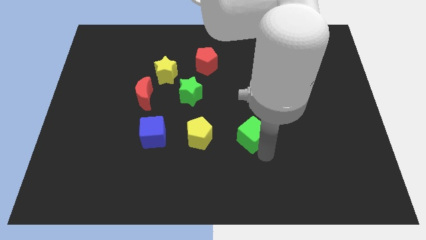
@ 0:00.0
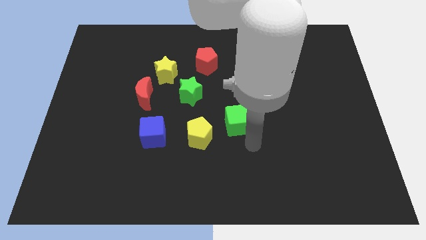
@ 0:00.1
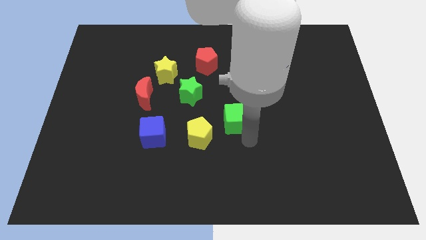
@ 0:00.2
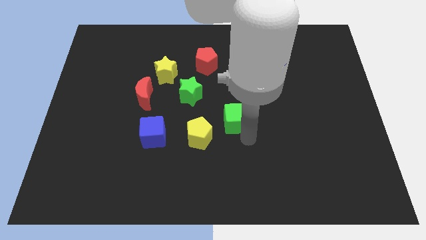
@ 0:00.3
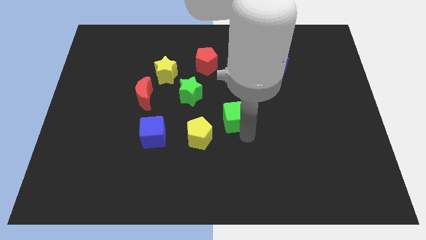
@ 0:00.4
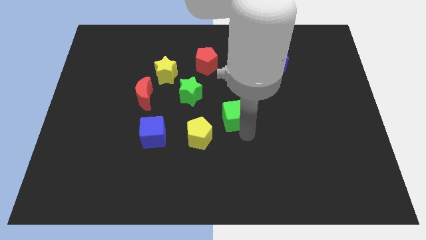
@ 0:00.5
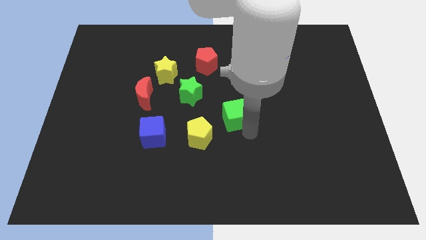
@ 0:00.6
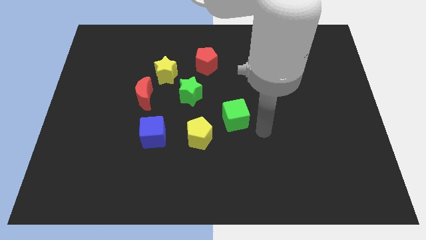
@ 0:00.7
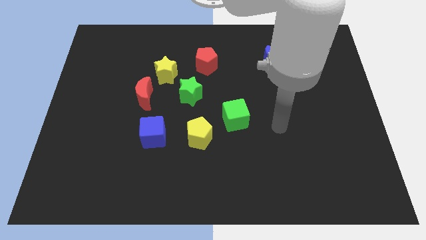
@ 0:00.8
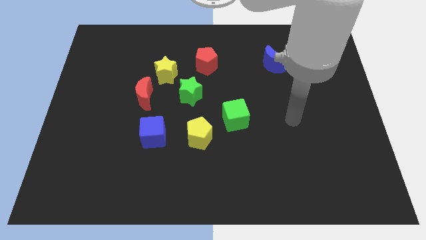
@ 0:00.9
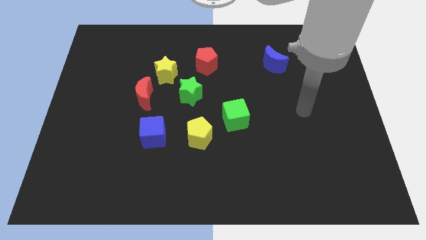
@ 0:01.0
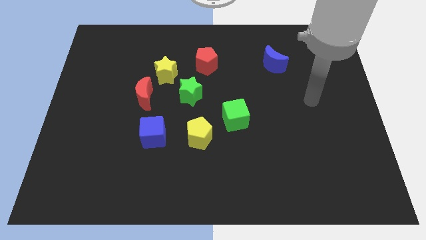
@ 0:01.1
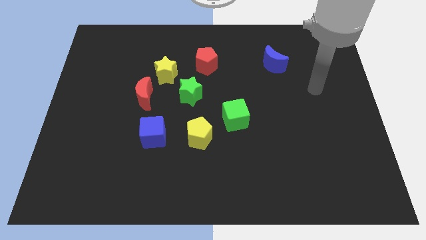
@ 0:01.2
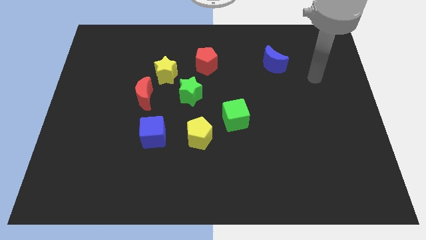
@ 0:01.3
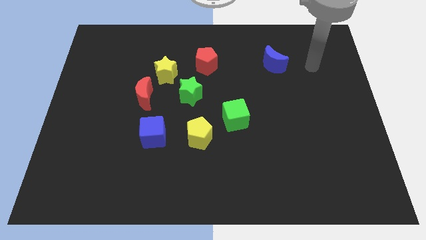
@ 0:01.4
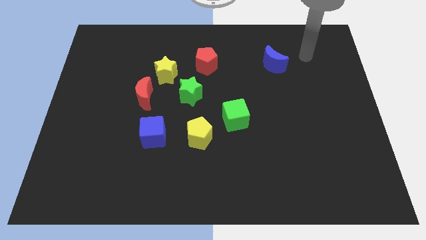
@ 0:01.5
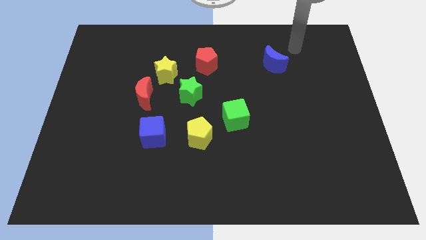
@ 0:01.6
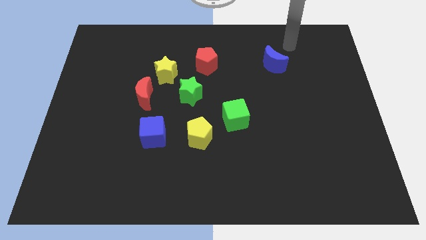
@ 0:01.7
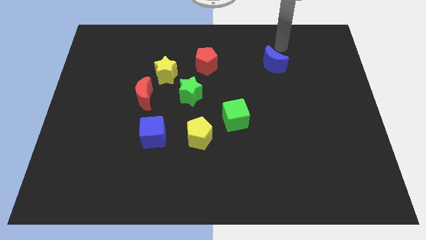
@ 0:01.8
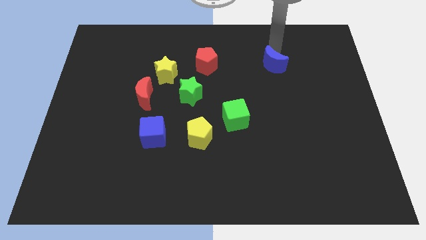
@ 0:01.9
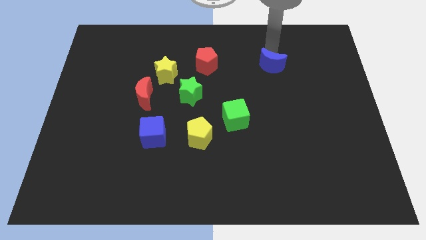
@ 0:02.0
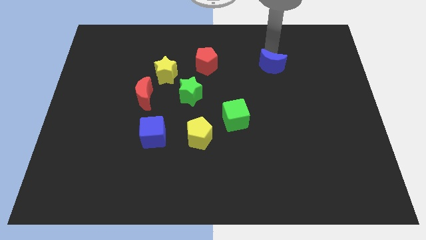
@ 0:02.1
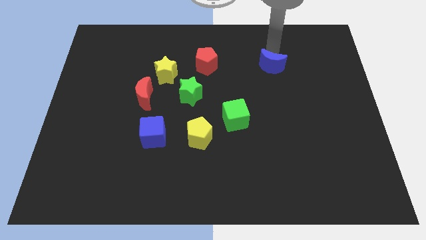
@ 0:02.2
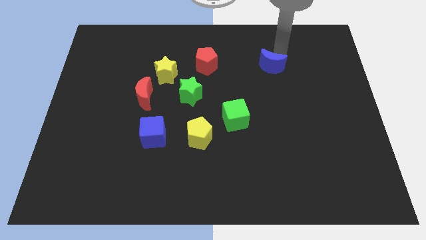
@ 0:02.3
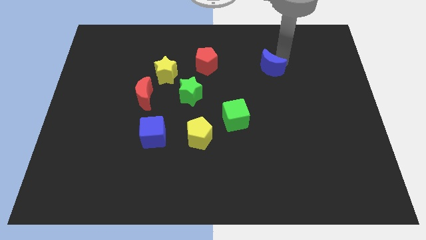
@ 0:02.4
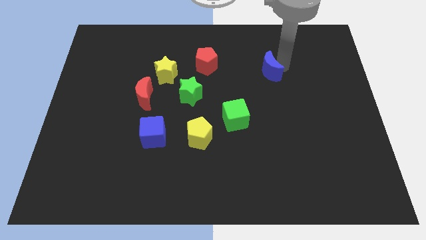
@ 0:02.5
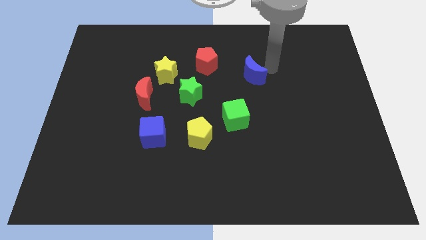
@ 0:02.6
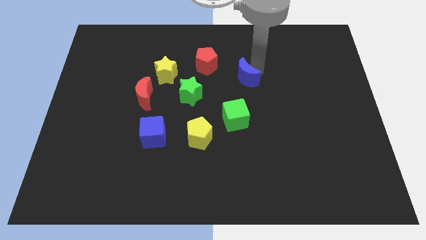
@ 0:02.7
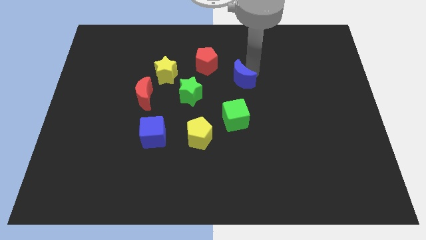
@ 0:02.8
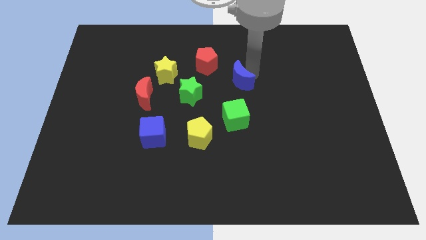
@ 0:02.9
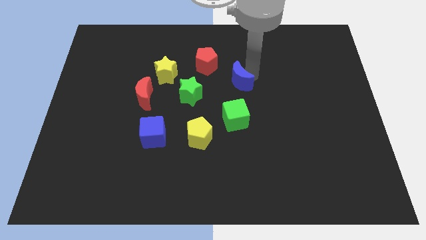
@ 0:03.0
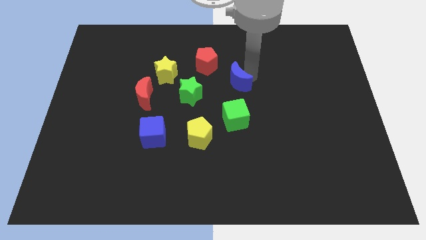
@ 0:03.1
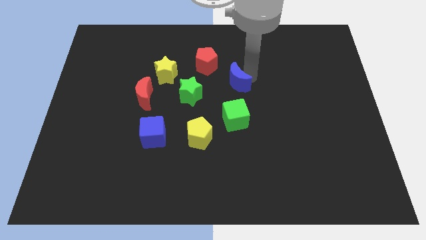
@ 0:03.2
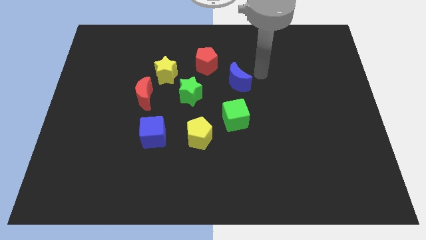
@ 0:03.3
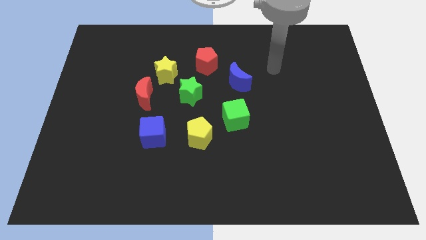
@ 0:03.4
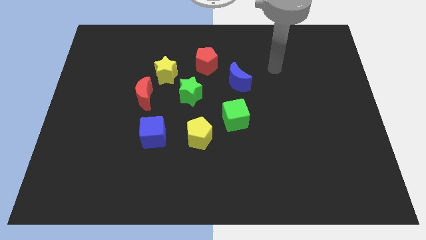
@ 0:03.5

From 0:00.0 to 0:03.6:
move the blue moon diagonally bottom right to red pentagon

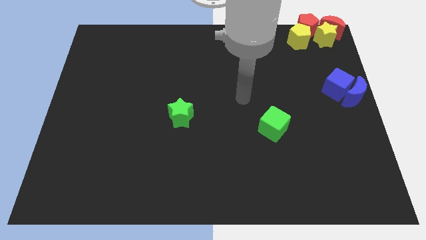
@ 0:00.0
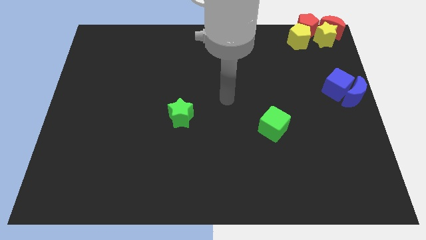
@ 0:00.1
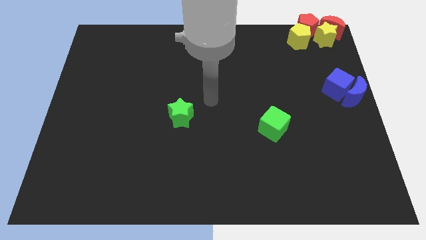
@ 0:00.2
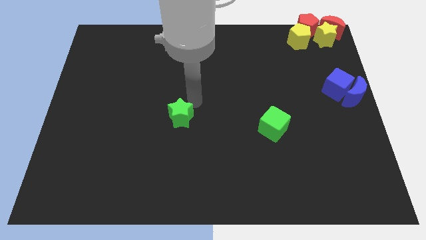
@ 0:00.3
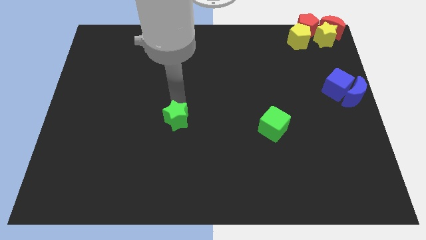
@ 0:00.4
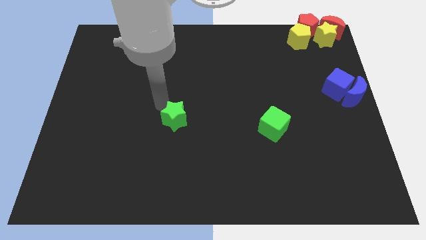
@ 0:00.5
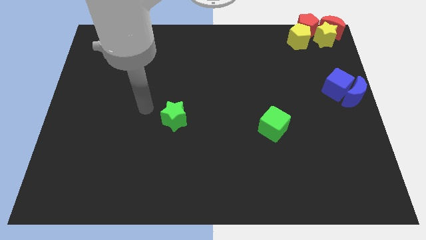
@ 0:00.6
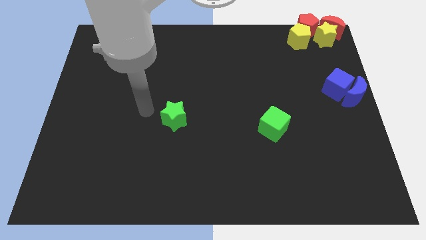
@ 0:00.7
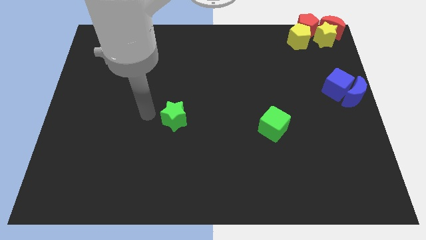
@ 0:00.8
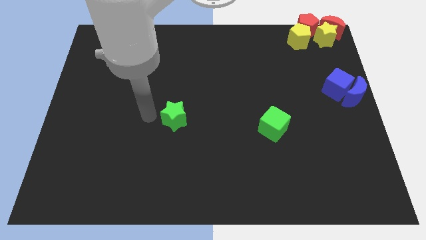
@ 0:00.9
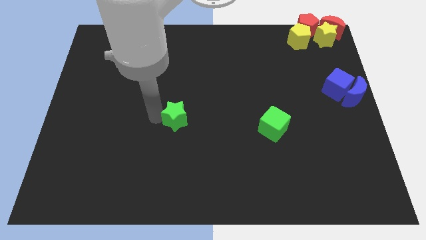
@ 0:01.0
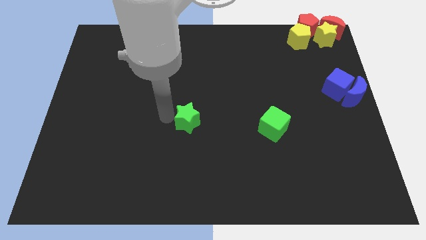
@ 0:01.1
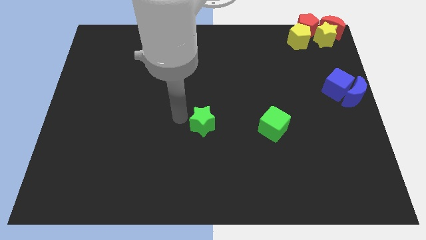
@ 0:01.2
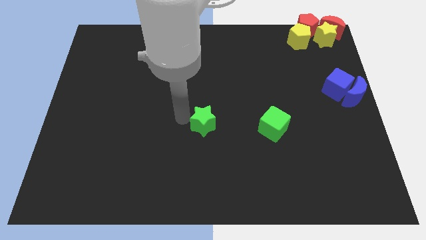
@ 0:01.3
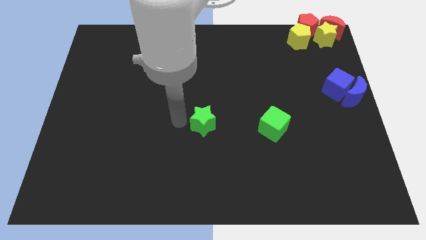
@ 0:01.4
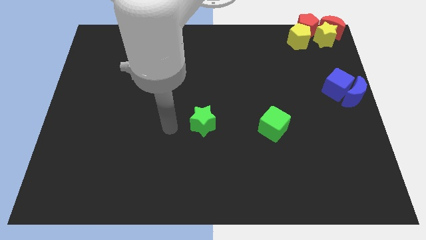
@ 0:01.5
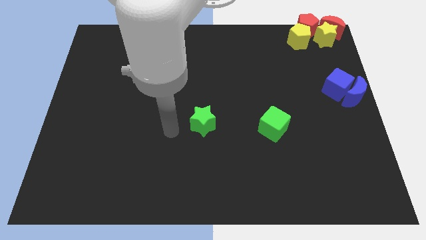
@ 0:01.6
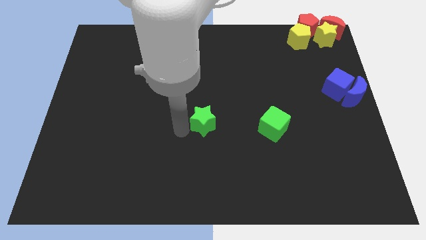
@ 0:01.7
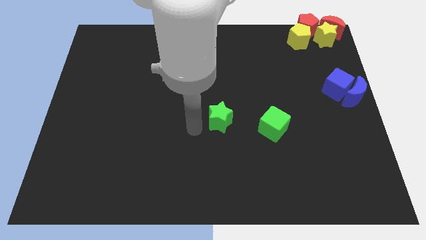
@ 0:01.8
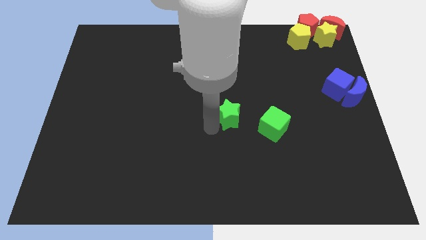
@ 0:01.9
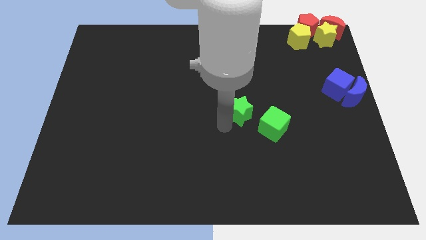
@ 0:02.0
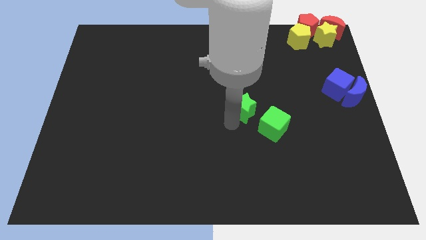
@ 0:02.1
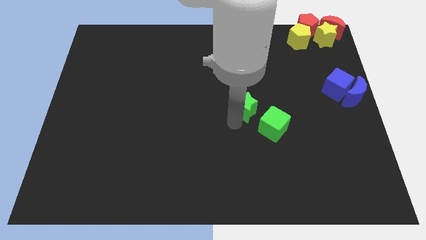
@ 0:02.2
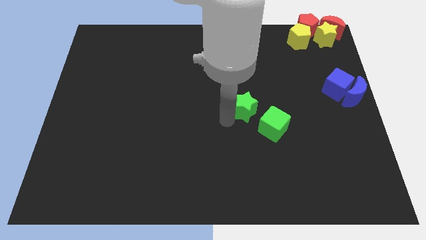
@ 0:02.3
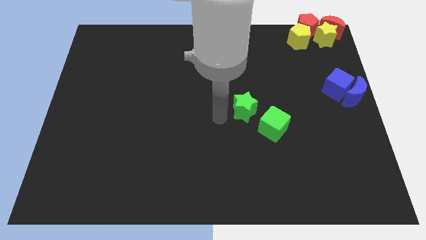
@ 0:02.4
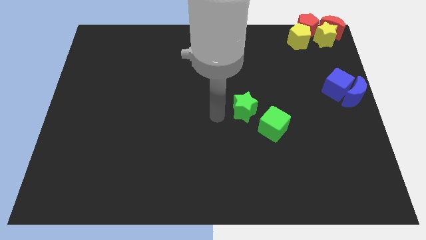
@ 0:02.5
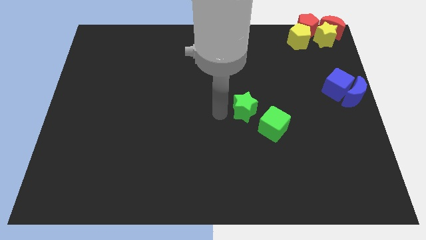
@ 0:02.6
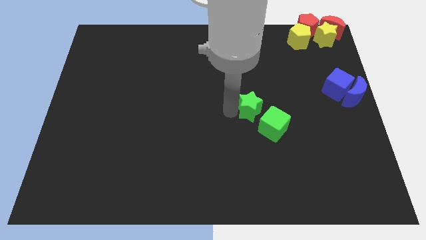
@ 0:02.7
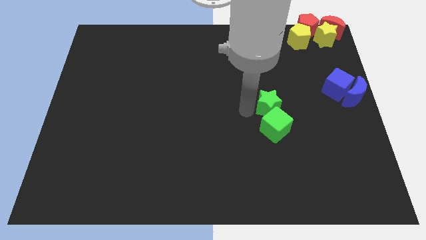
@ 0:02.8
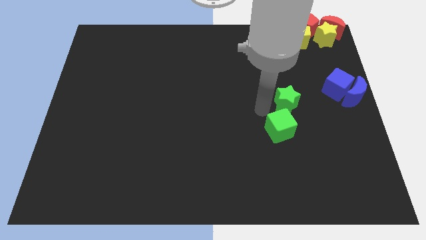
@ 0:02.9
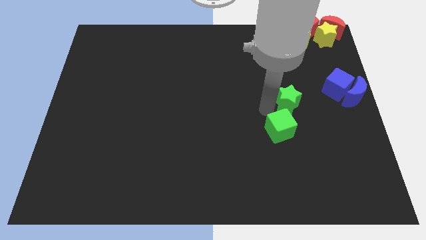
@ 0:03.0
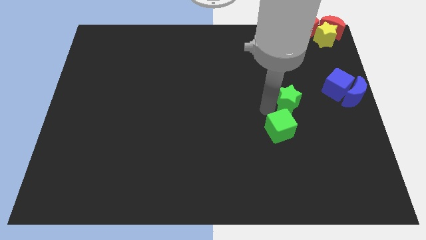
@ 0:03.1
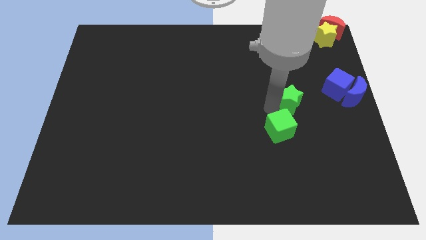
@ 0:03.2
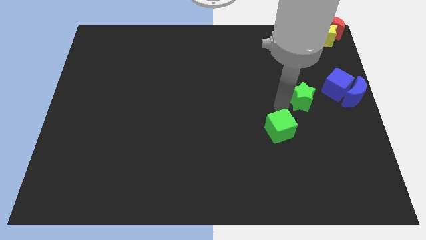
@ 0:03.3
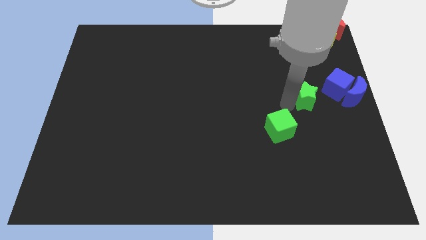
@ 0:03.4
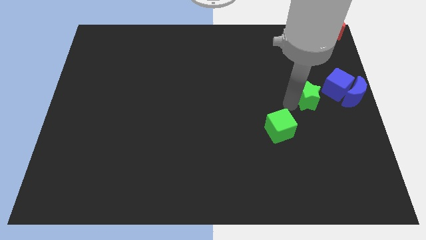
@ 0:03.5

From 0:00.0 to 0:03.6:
place the green star between blue cube and green cube

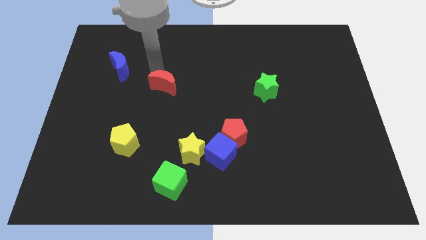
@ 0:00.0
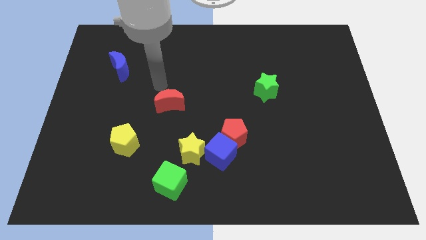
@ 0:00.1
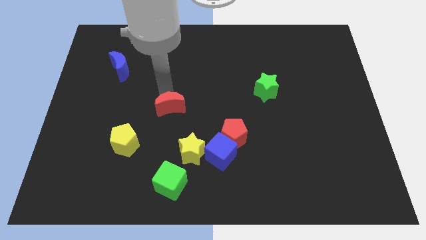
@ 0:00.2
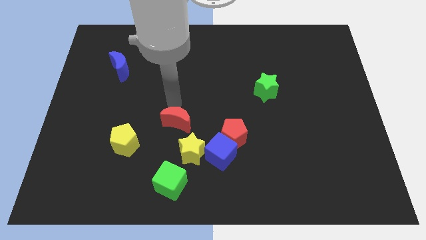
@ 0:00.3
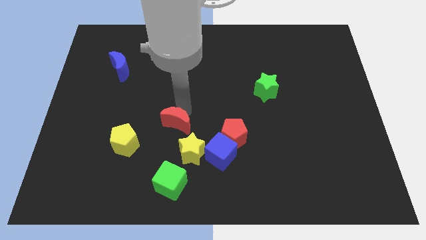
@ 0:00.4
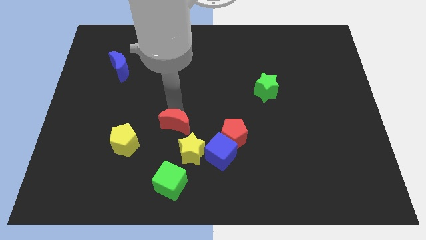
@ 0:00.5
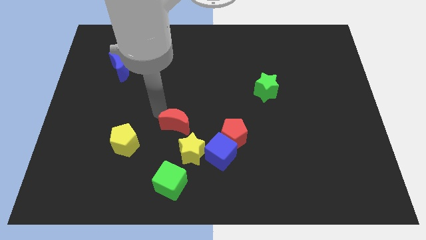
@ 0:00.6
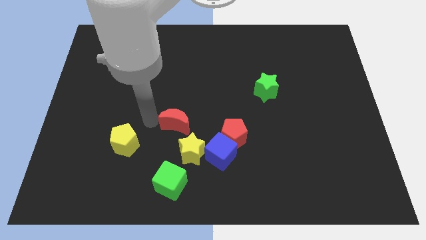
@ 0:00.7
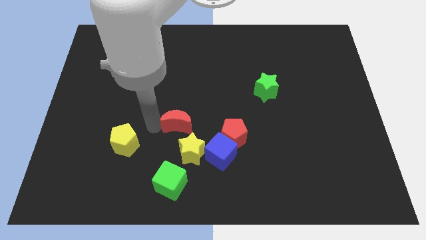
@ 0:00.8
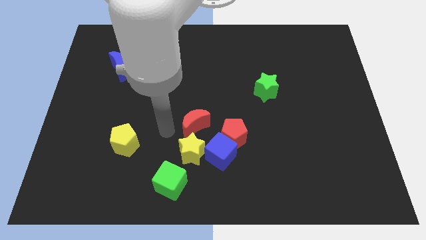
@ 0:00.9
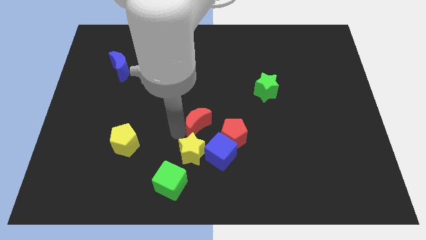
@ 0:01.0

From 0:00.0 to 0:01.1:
place the red crescent above the yellow star

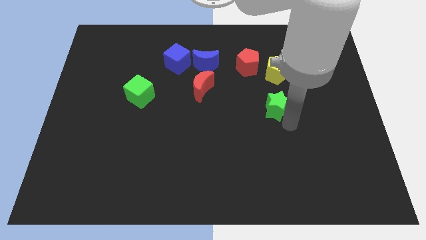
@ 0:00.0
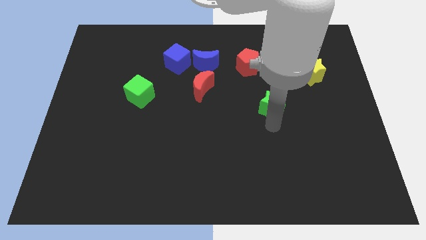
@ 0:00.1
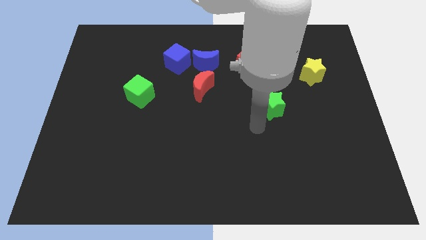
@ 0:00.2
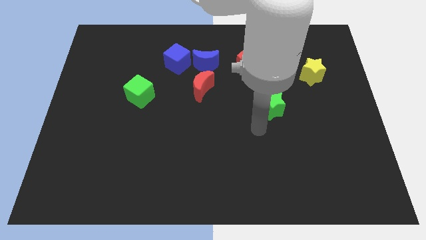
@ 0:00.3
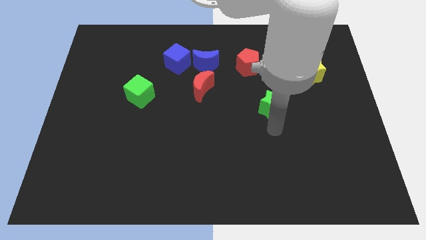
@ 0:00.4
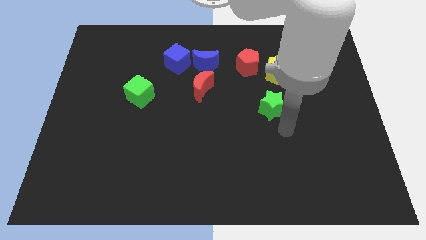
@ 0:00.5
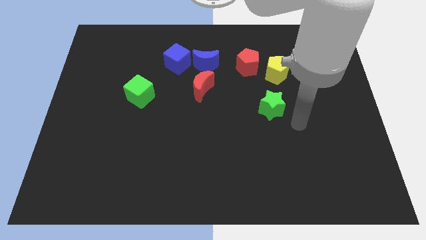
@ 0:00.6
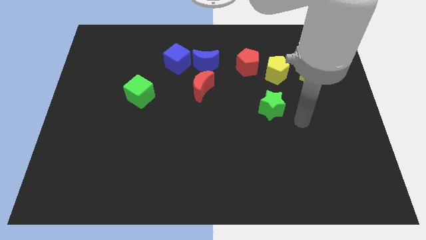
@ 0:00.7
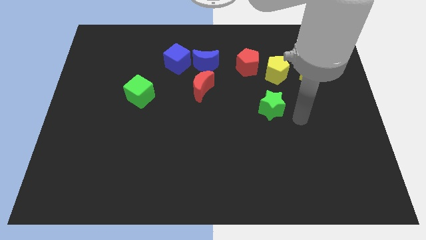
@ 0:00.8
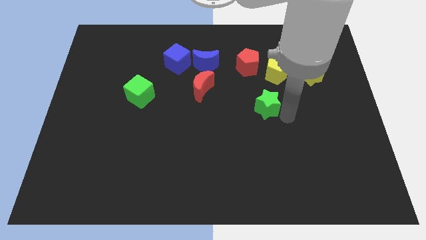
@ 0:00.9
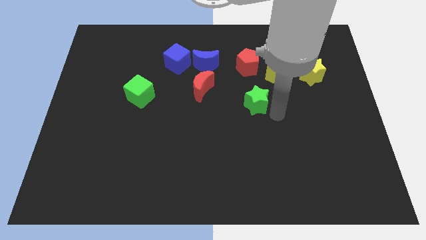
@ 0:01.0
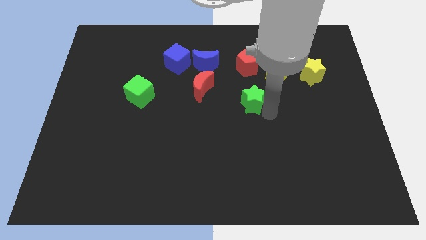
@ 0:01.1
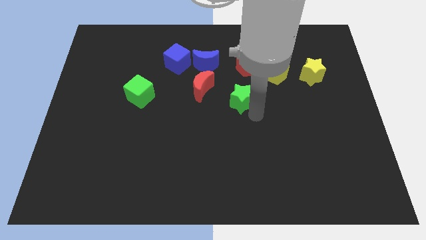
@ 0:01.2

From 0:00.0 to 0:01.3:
move the green star upwards left to the red crescent
